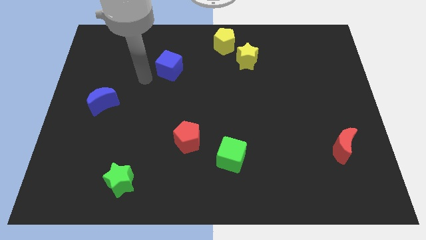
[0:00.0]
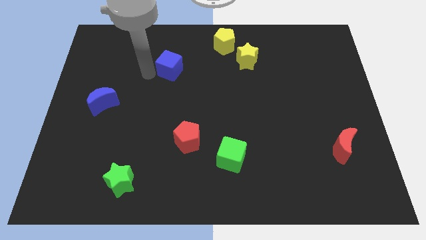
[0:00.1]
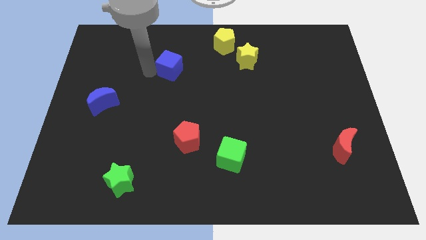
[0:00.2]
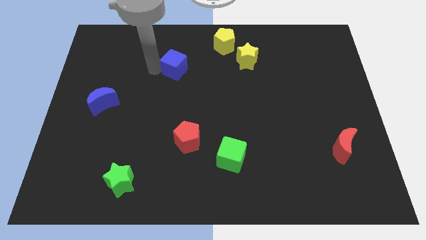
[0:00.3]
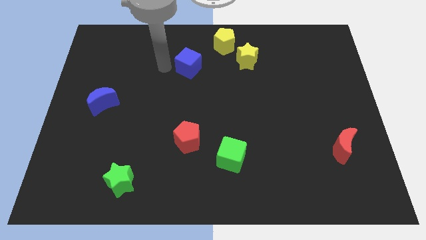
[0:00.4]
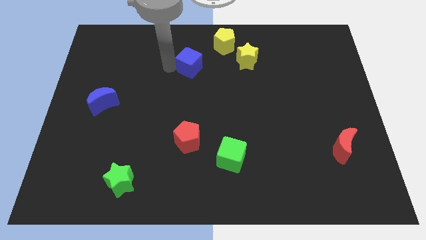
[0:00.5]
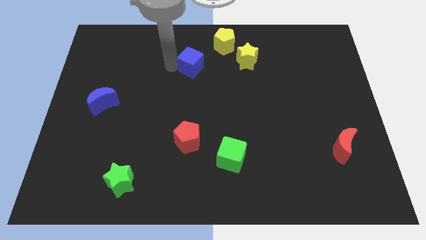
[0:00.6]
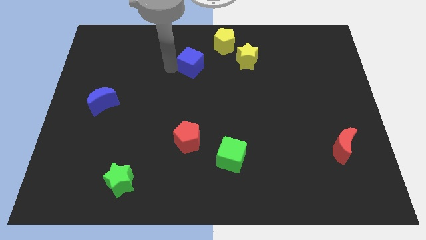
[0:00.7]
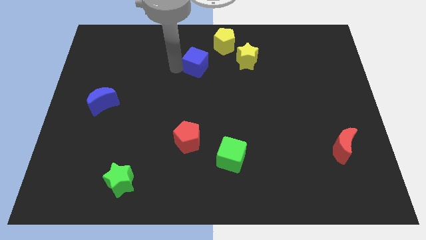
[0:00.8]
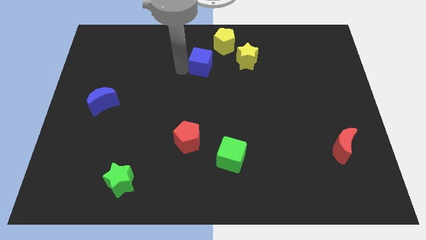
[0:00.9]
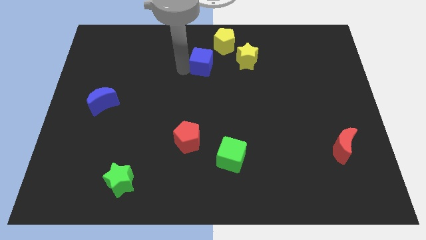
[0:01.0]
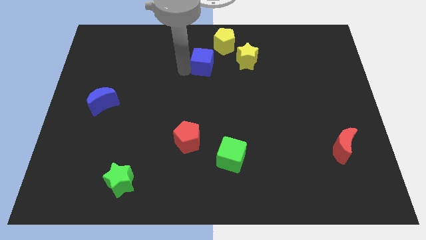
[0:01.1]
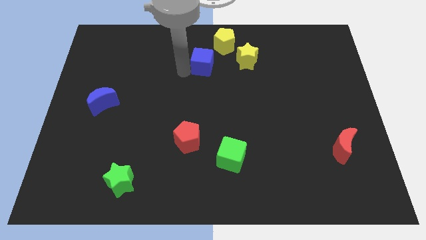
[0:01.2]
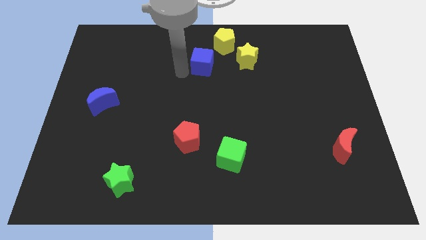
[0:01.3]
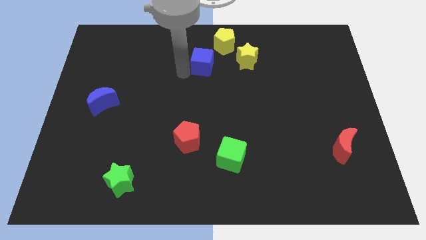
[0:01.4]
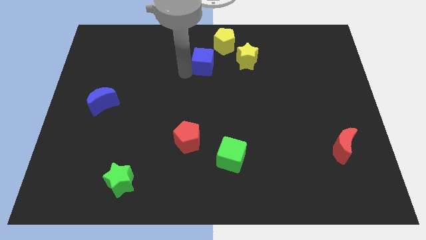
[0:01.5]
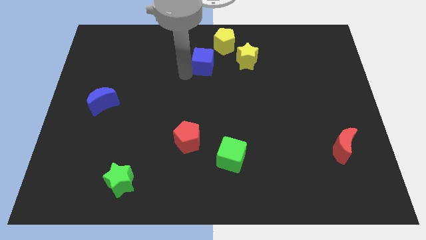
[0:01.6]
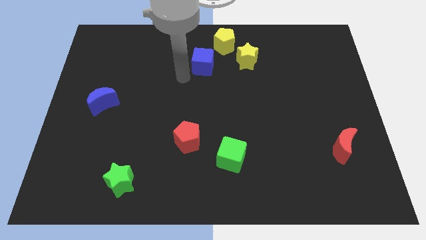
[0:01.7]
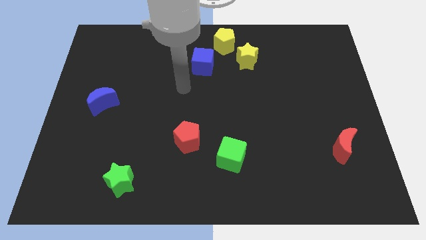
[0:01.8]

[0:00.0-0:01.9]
push the blue cube close to the yellow pentagon

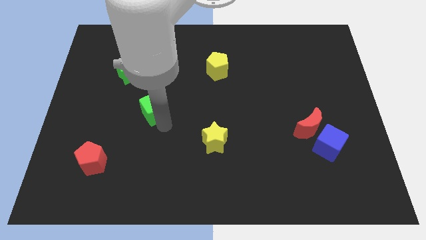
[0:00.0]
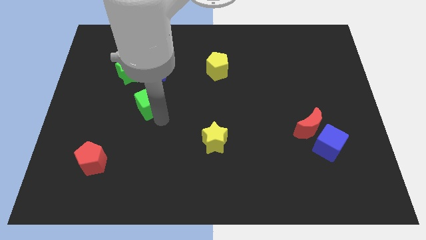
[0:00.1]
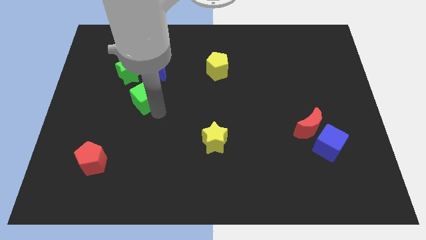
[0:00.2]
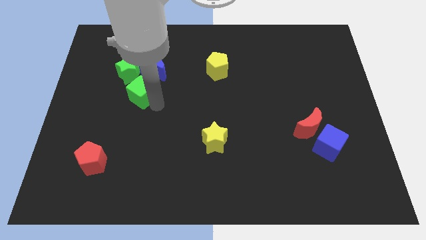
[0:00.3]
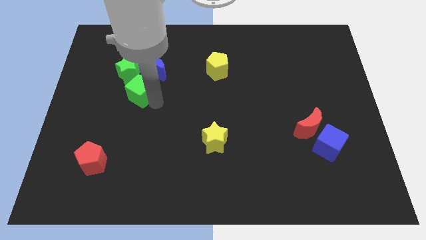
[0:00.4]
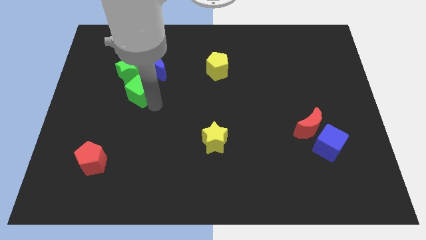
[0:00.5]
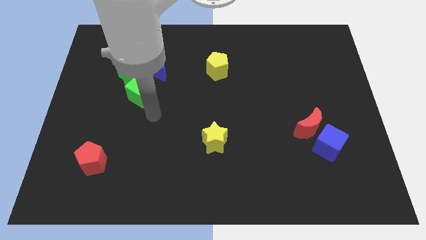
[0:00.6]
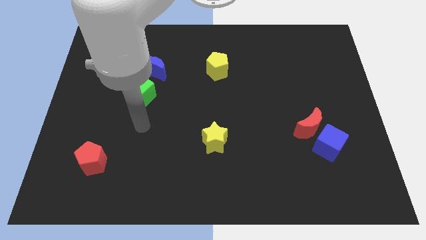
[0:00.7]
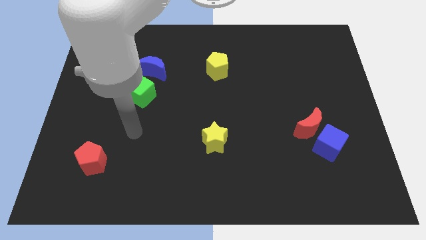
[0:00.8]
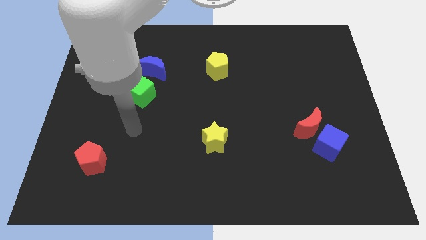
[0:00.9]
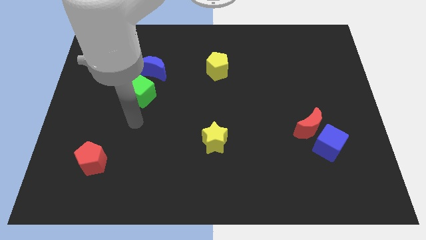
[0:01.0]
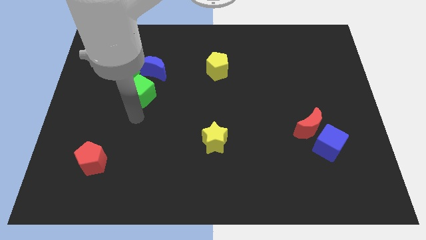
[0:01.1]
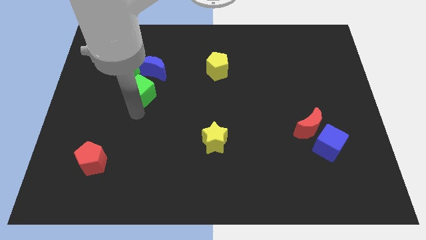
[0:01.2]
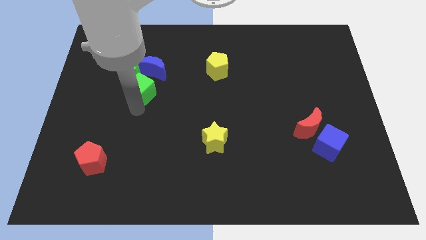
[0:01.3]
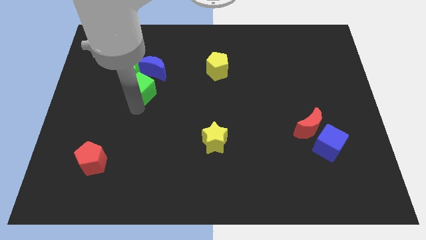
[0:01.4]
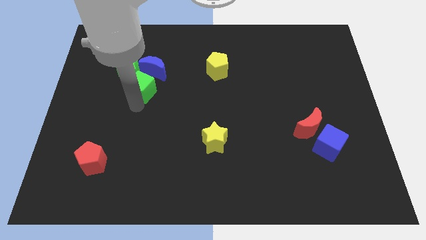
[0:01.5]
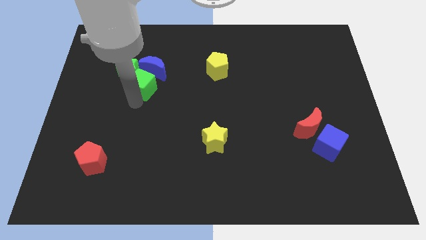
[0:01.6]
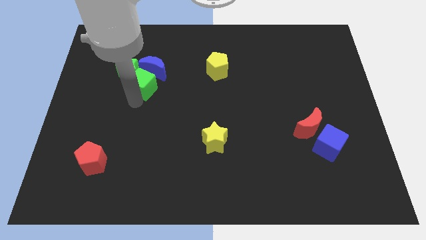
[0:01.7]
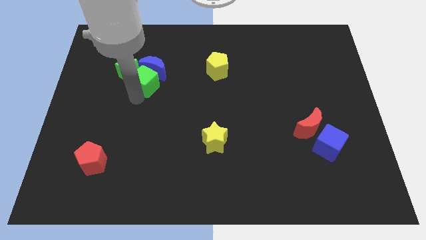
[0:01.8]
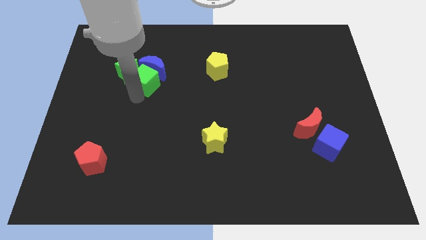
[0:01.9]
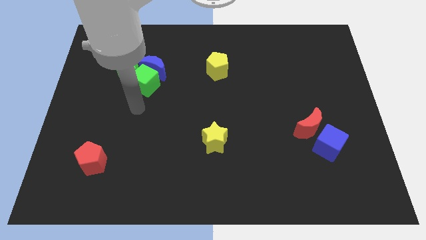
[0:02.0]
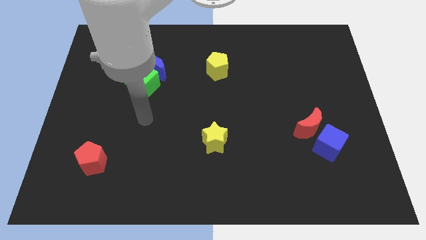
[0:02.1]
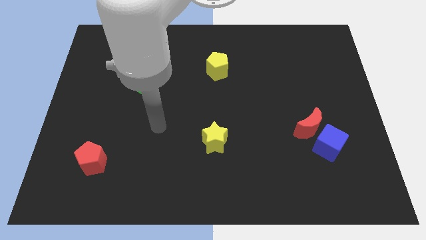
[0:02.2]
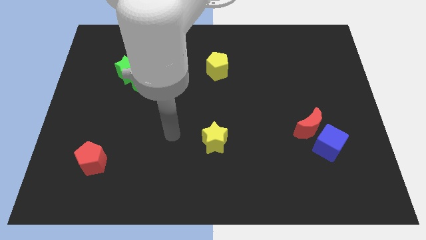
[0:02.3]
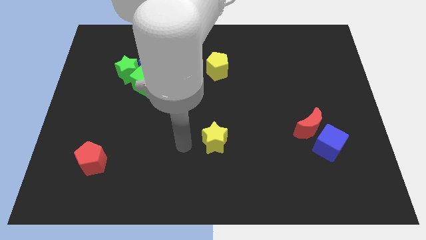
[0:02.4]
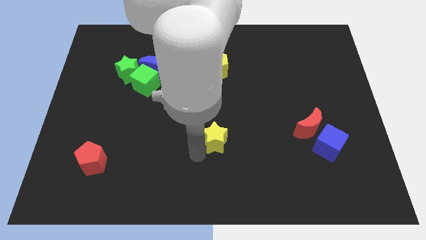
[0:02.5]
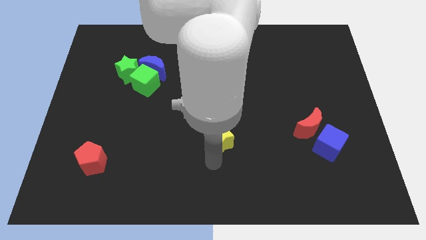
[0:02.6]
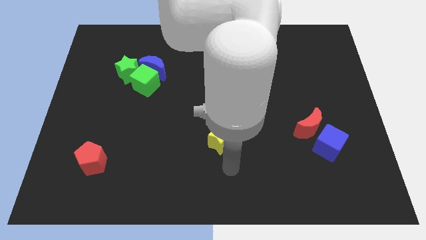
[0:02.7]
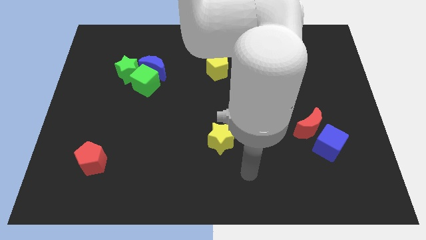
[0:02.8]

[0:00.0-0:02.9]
push the green cube in between the green star and blue moon

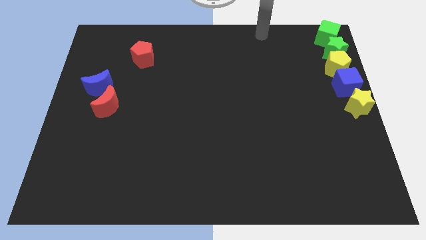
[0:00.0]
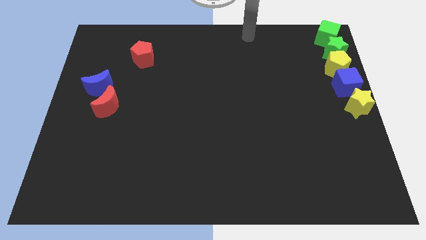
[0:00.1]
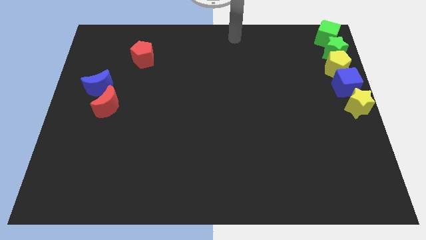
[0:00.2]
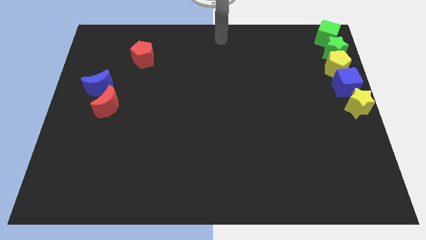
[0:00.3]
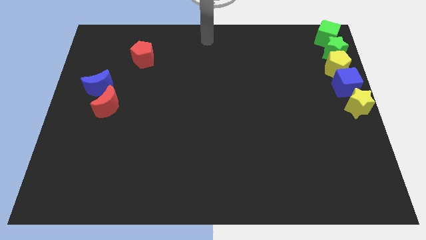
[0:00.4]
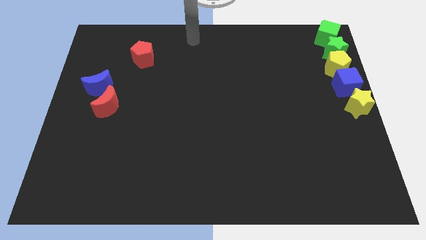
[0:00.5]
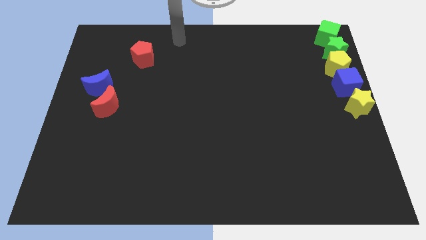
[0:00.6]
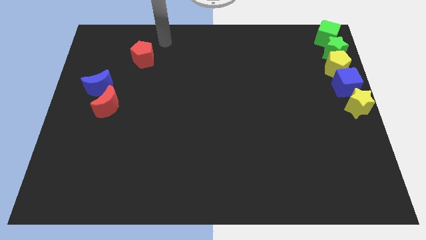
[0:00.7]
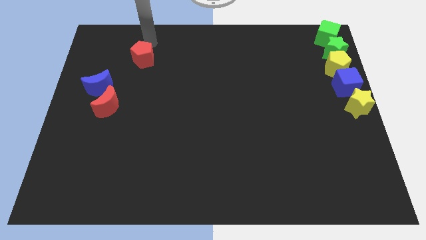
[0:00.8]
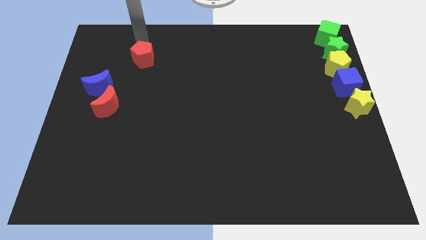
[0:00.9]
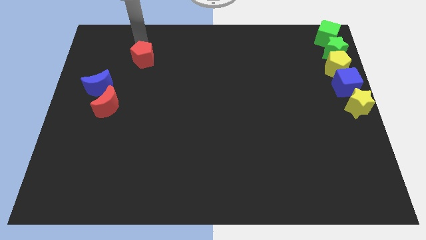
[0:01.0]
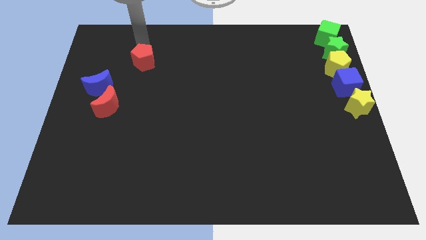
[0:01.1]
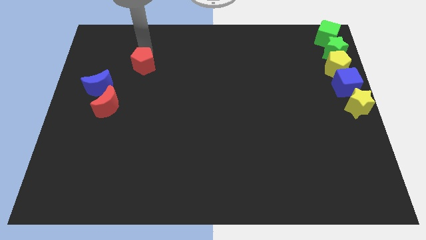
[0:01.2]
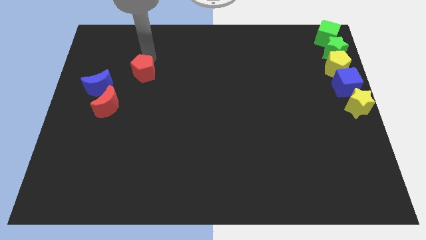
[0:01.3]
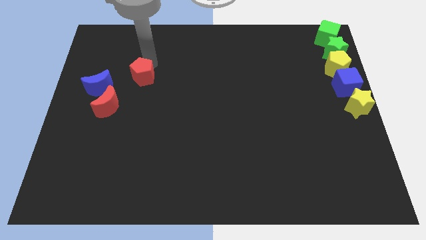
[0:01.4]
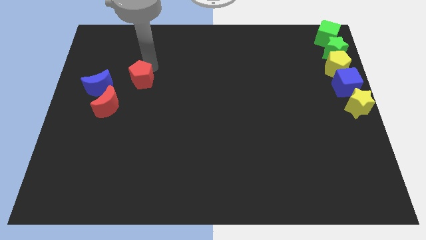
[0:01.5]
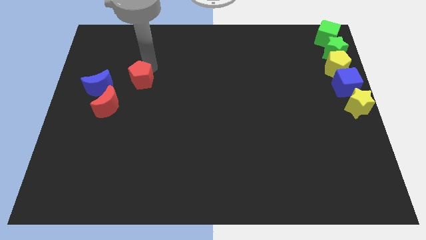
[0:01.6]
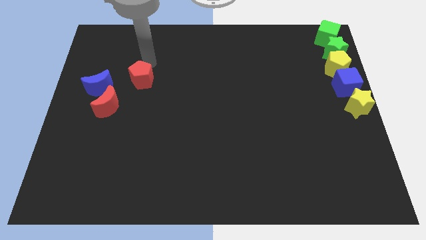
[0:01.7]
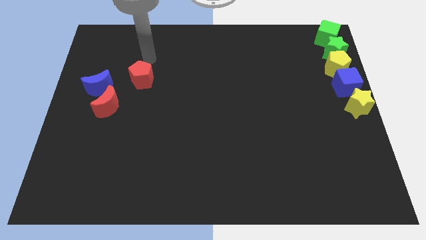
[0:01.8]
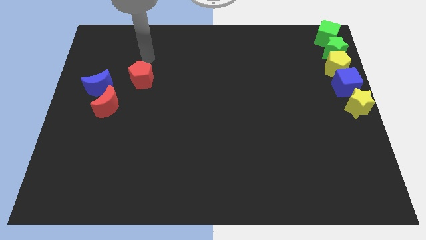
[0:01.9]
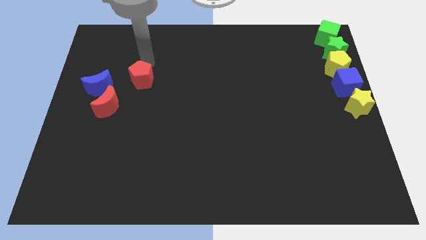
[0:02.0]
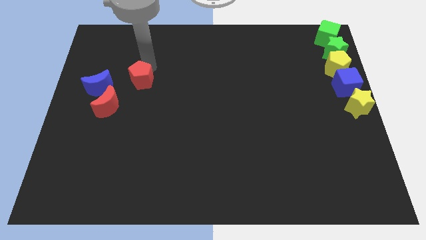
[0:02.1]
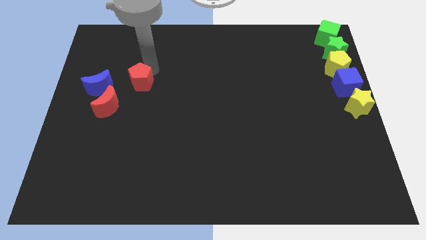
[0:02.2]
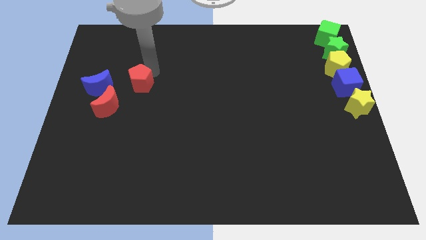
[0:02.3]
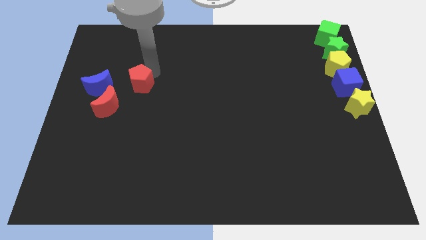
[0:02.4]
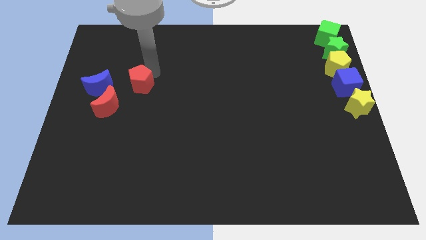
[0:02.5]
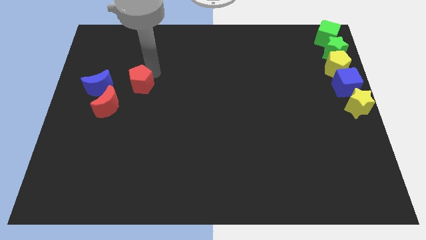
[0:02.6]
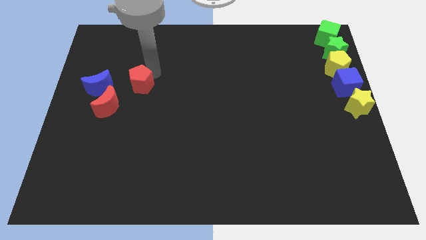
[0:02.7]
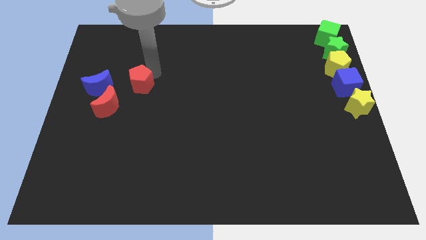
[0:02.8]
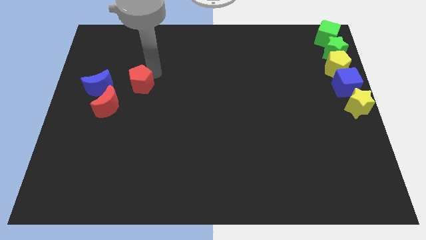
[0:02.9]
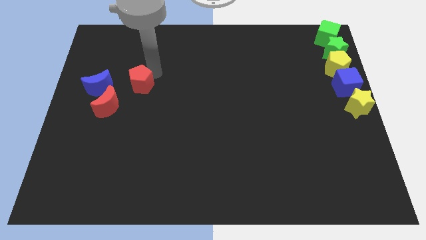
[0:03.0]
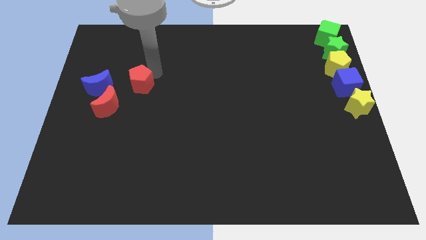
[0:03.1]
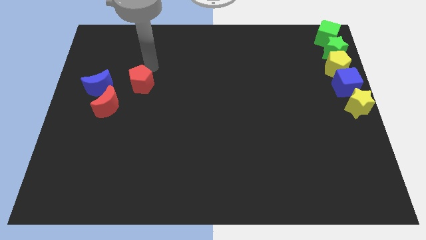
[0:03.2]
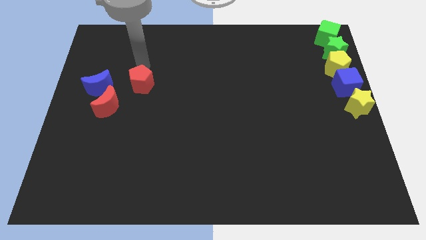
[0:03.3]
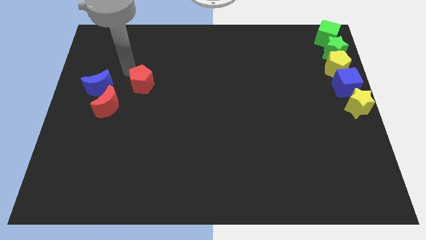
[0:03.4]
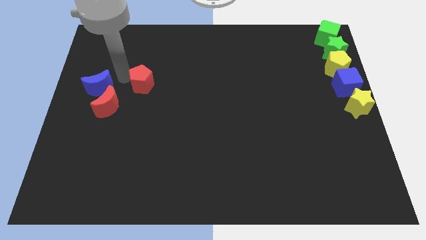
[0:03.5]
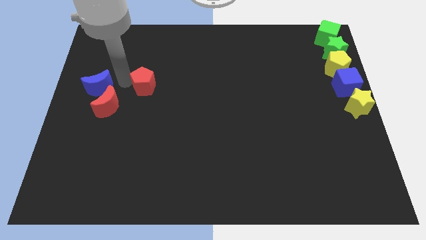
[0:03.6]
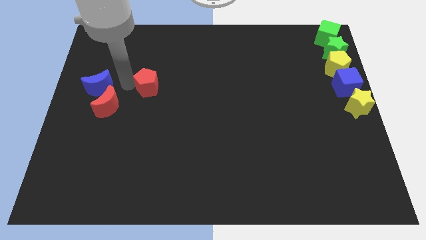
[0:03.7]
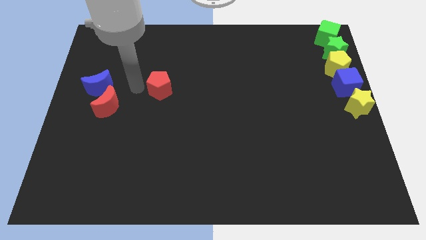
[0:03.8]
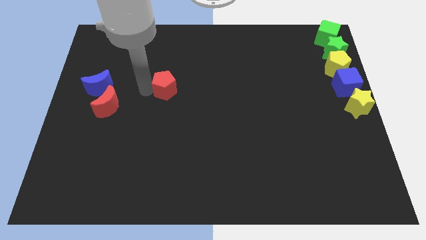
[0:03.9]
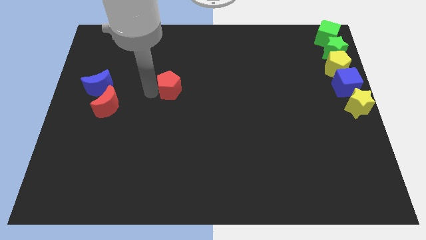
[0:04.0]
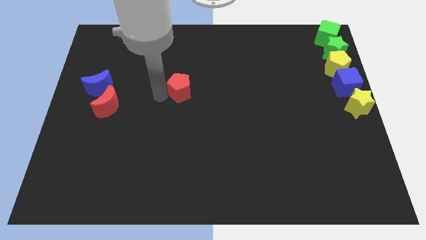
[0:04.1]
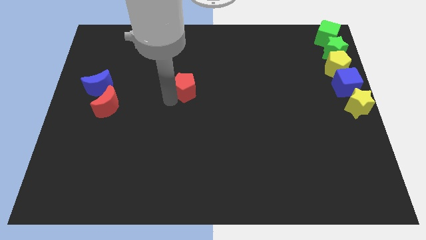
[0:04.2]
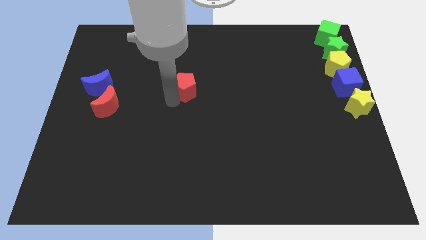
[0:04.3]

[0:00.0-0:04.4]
move the red pentagon to the right of the red crescent
